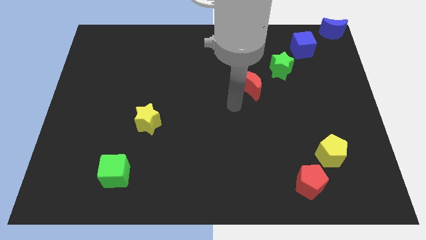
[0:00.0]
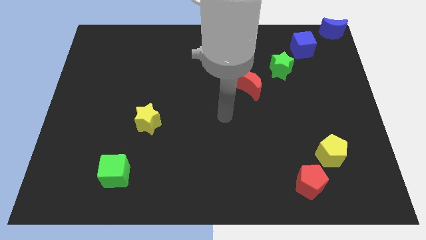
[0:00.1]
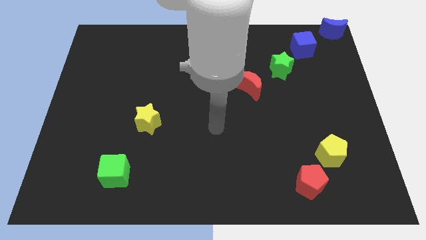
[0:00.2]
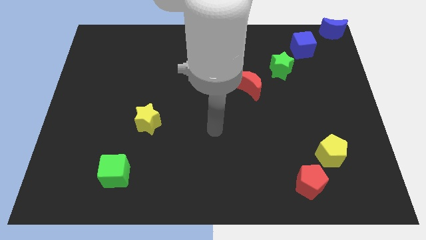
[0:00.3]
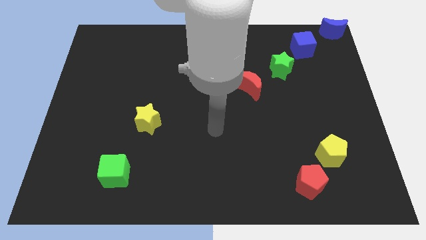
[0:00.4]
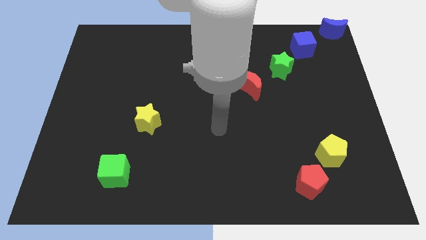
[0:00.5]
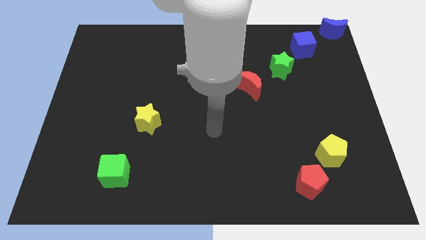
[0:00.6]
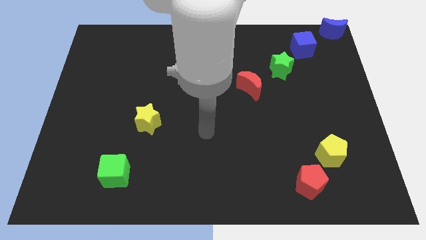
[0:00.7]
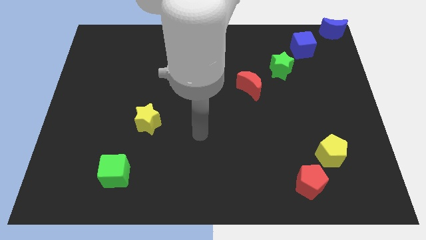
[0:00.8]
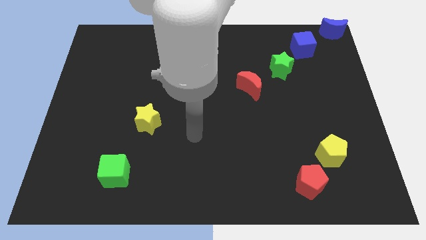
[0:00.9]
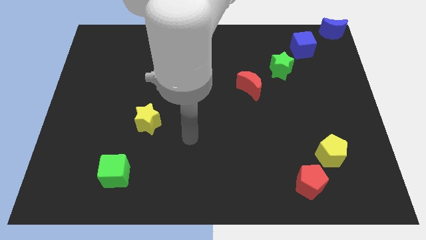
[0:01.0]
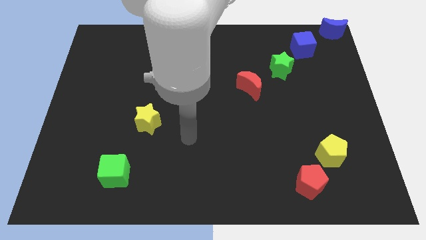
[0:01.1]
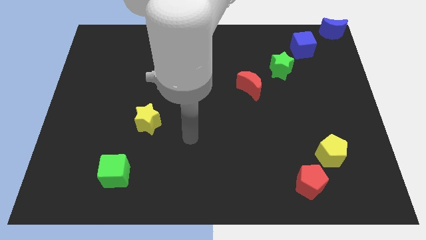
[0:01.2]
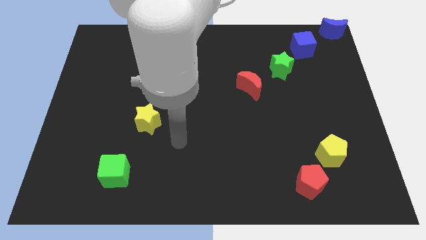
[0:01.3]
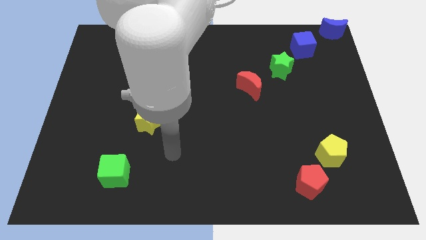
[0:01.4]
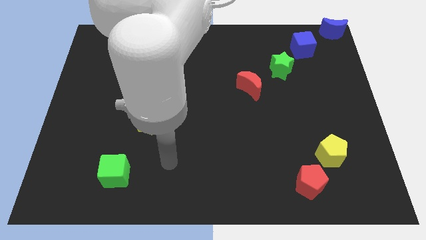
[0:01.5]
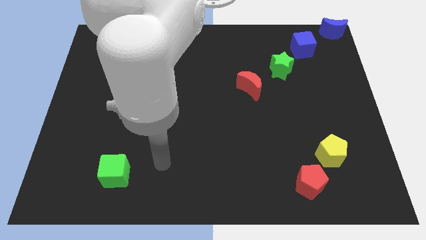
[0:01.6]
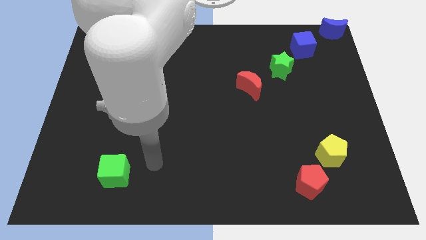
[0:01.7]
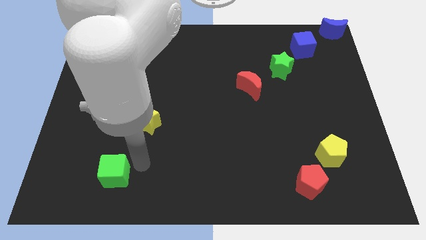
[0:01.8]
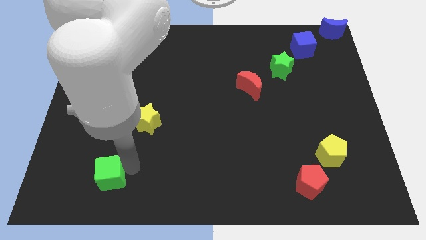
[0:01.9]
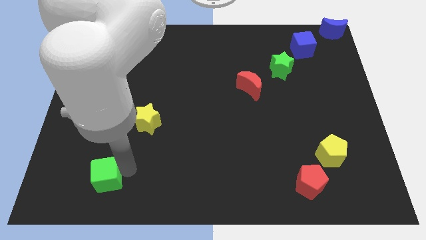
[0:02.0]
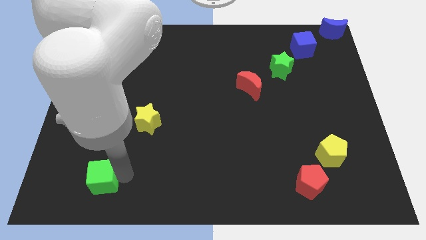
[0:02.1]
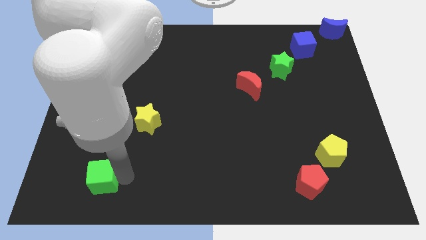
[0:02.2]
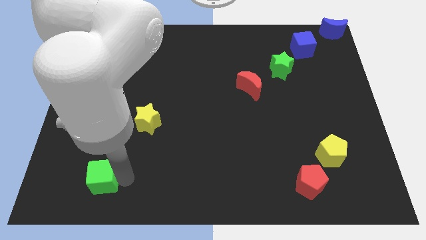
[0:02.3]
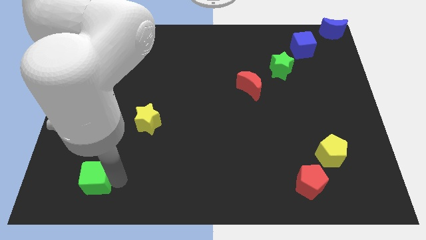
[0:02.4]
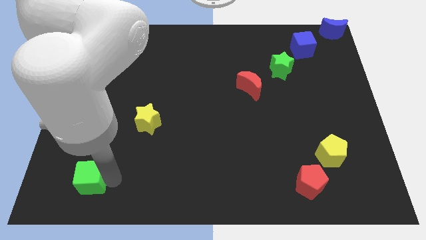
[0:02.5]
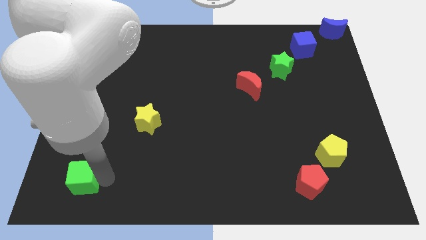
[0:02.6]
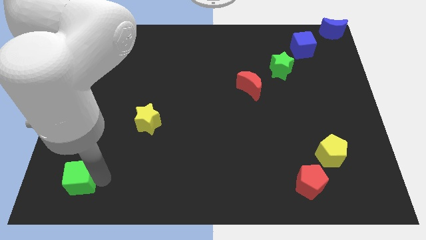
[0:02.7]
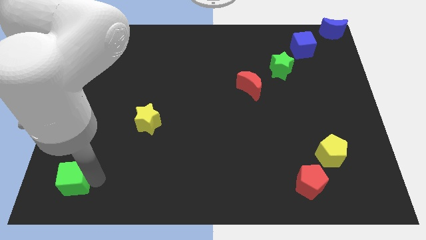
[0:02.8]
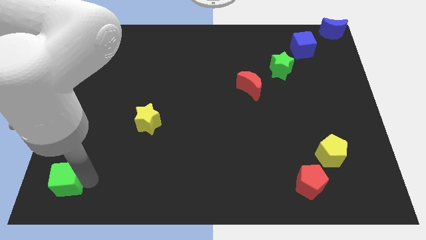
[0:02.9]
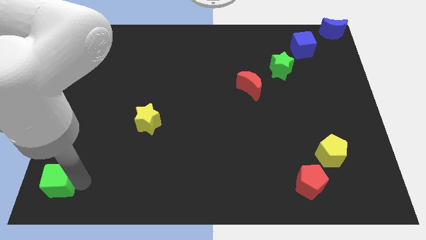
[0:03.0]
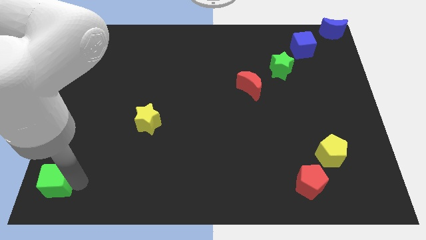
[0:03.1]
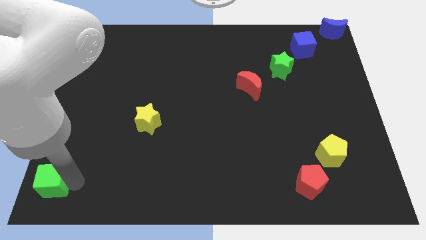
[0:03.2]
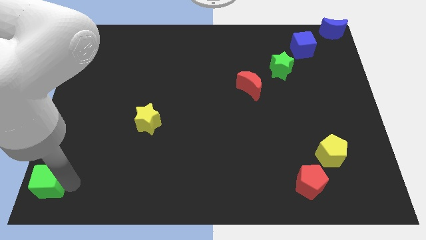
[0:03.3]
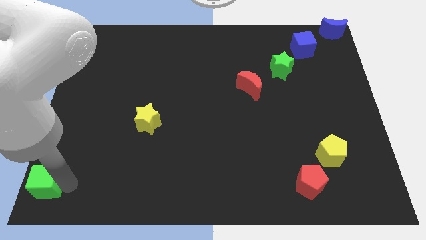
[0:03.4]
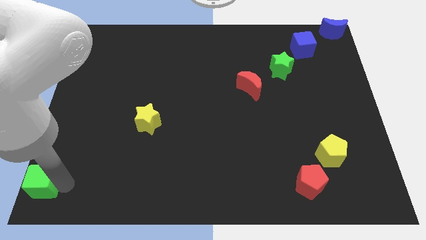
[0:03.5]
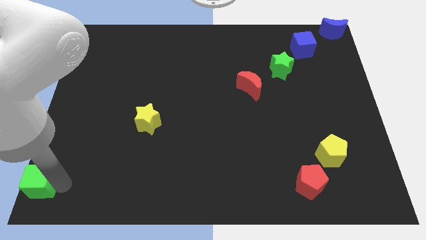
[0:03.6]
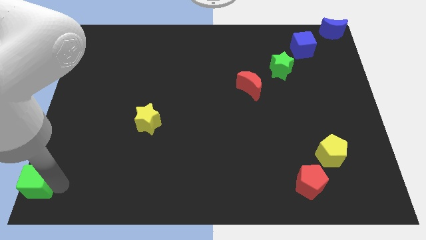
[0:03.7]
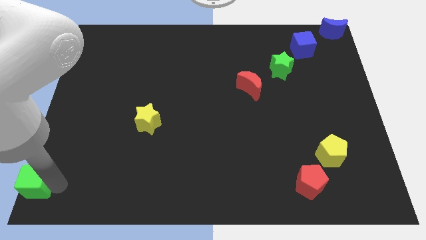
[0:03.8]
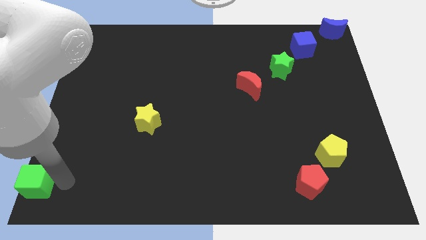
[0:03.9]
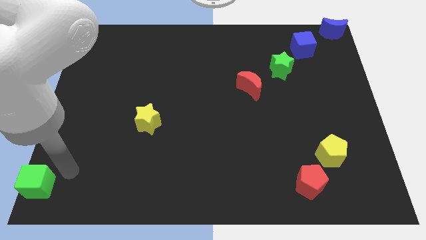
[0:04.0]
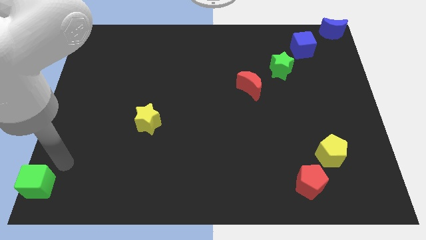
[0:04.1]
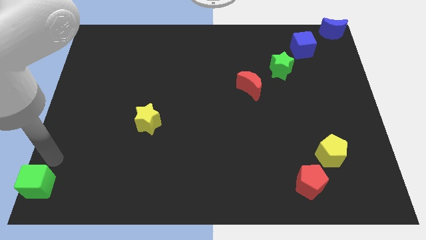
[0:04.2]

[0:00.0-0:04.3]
push the green cube to the left side of the board

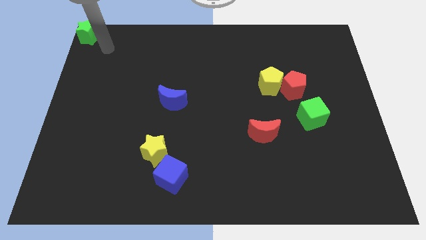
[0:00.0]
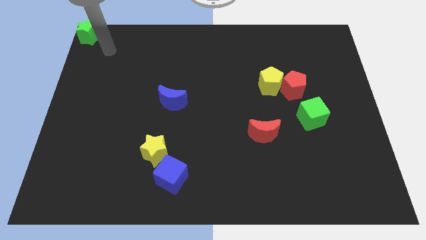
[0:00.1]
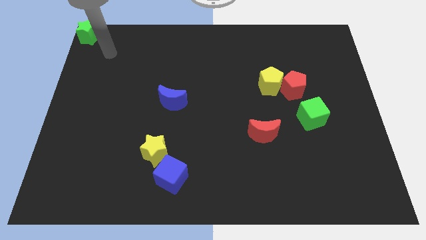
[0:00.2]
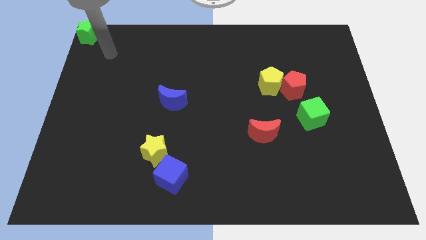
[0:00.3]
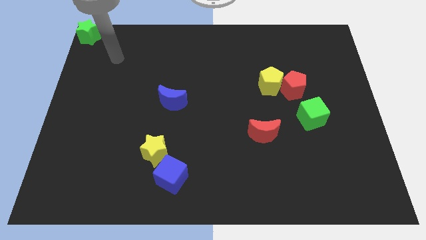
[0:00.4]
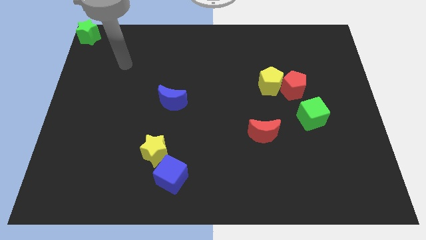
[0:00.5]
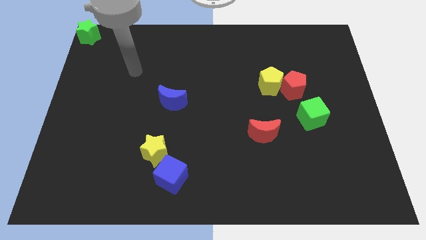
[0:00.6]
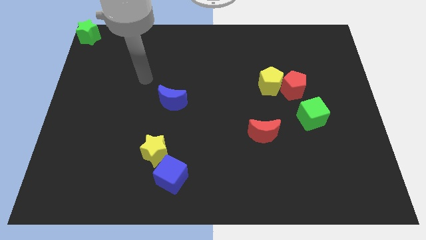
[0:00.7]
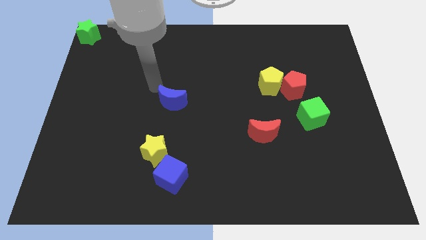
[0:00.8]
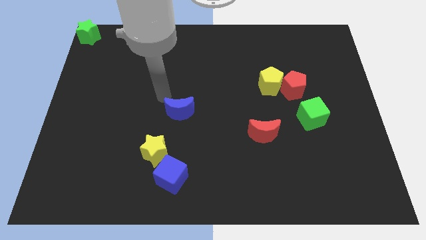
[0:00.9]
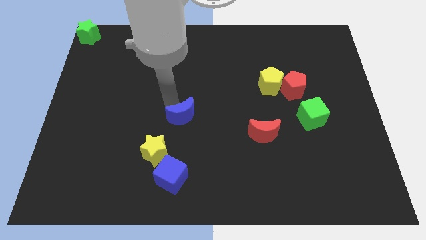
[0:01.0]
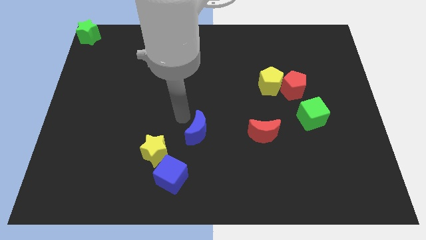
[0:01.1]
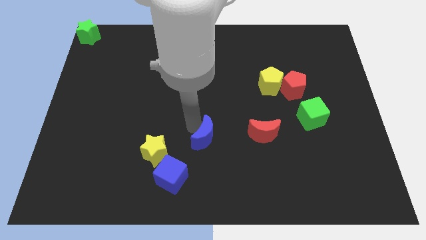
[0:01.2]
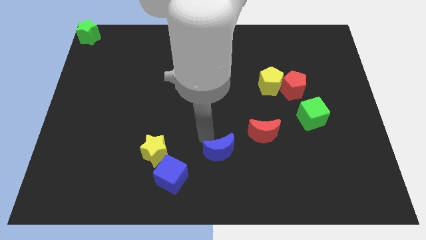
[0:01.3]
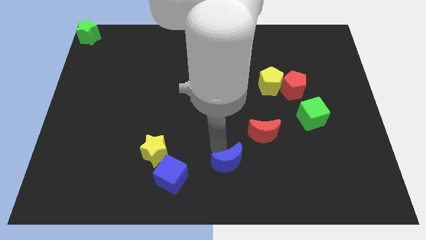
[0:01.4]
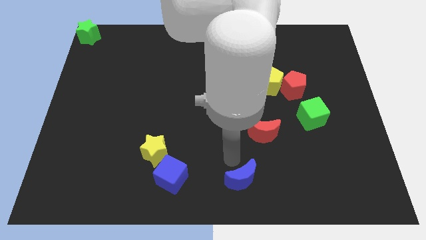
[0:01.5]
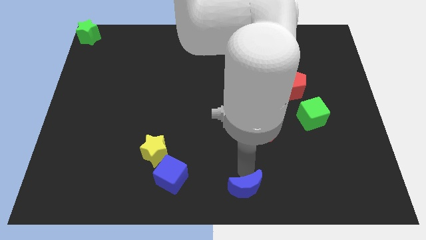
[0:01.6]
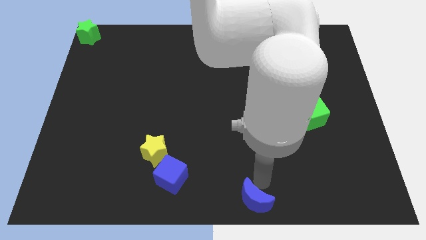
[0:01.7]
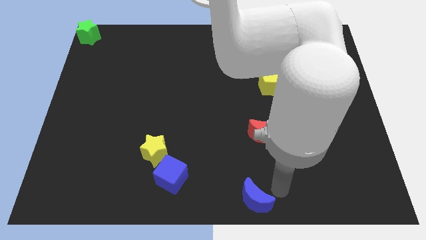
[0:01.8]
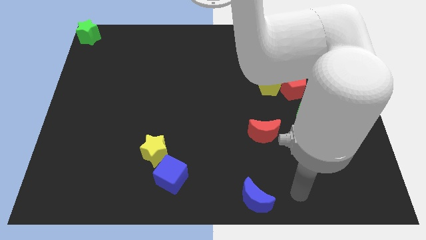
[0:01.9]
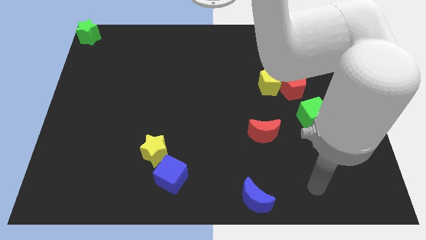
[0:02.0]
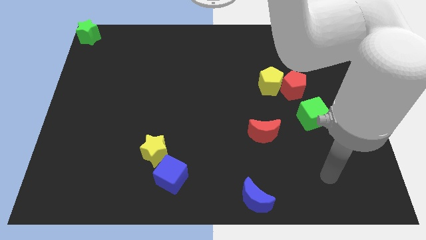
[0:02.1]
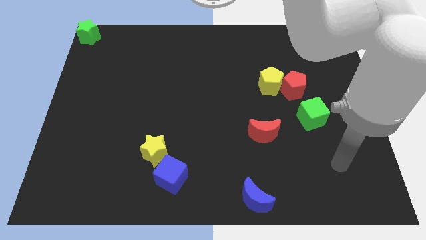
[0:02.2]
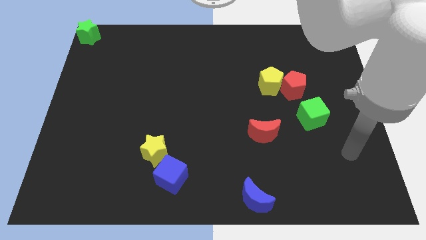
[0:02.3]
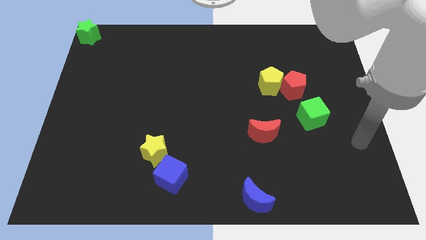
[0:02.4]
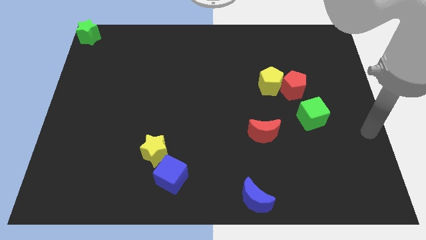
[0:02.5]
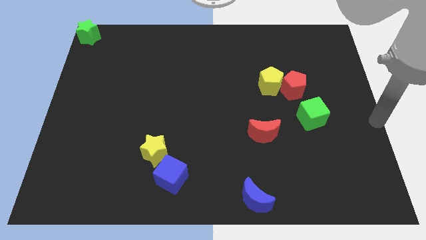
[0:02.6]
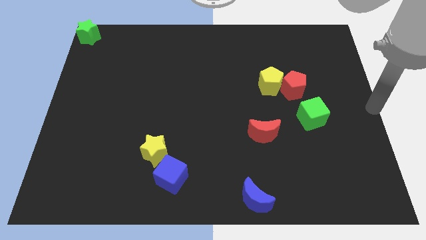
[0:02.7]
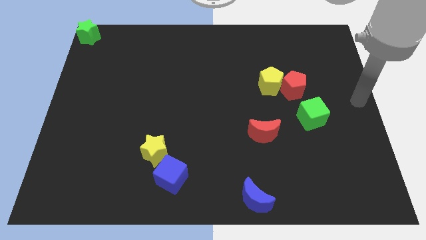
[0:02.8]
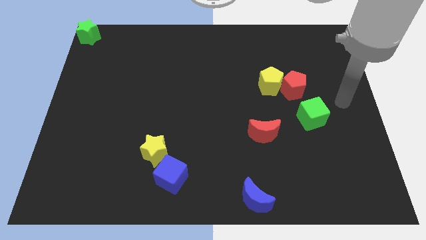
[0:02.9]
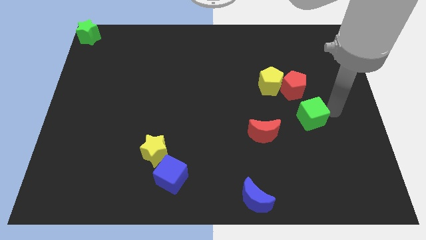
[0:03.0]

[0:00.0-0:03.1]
move the blue crescent bottom center

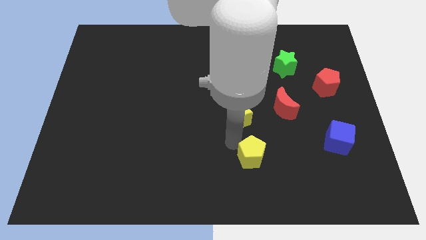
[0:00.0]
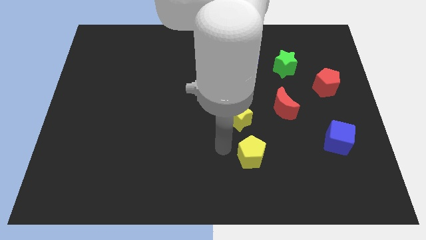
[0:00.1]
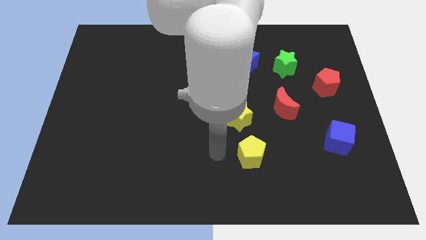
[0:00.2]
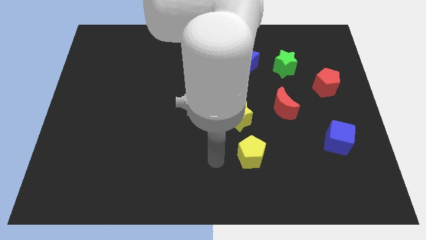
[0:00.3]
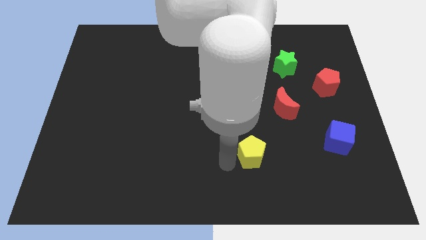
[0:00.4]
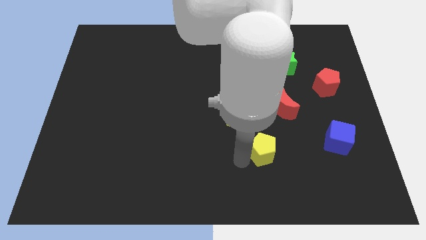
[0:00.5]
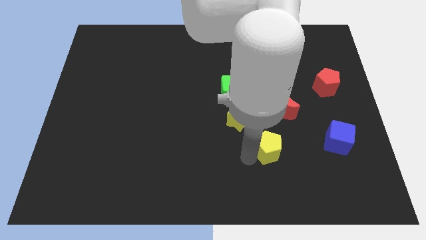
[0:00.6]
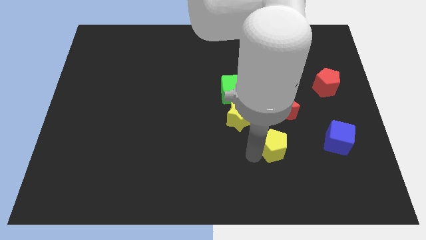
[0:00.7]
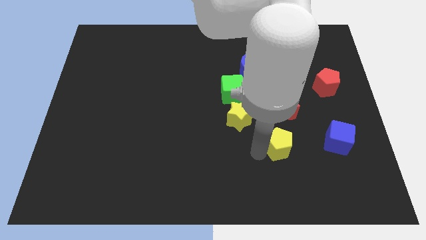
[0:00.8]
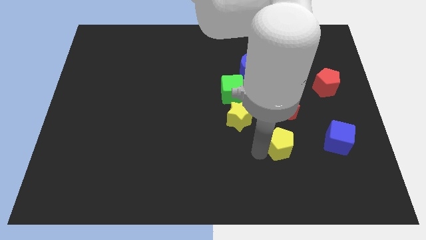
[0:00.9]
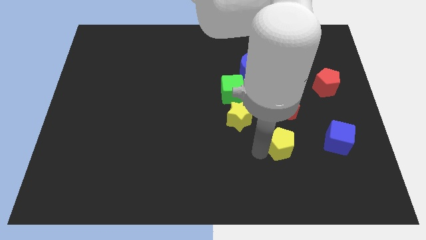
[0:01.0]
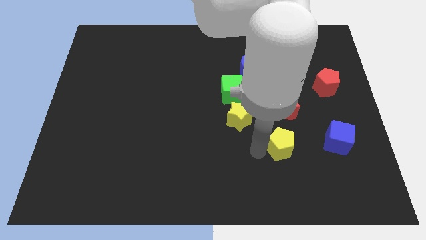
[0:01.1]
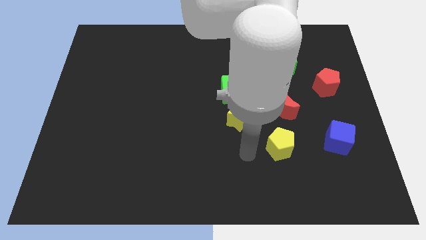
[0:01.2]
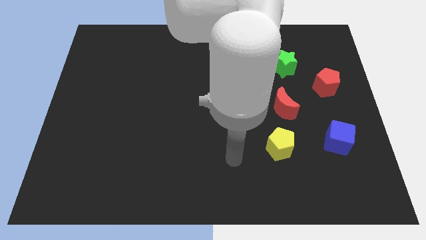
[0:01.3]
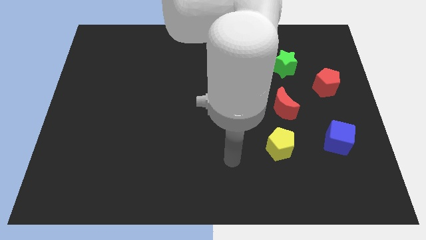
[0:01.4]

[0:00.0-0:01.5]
move the yellow pentagon to the right side slightly

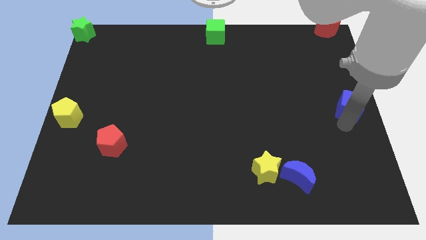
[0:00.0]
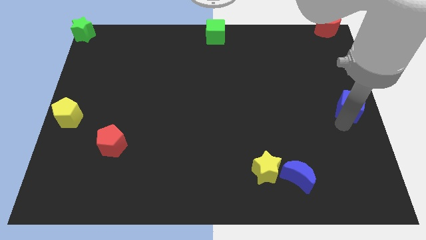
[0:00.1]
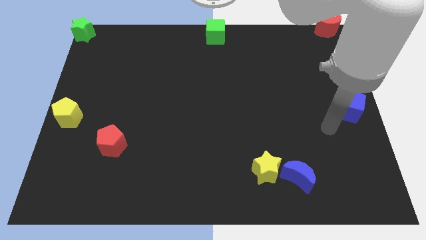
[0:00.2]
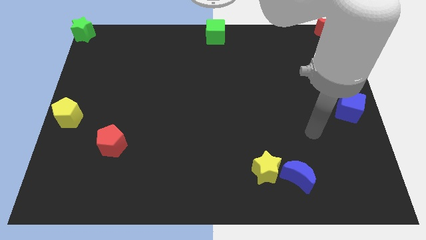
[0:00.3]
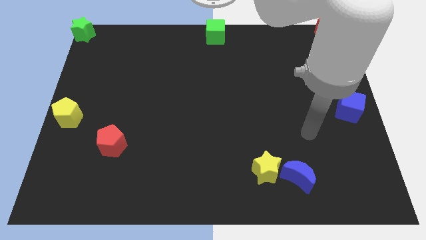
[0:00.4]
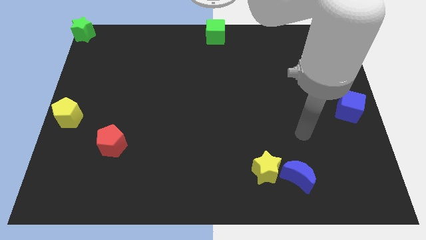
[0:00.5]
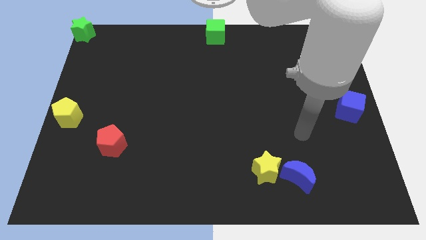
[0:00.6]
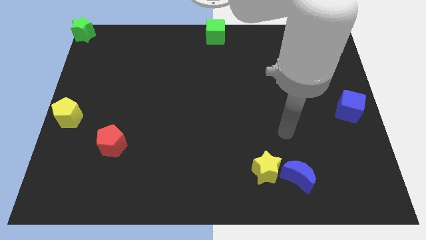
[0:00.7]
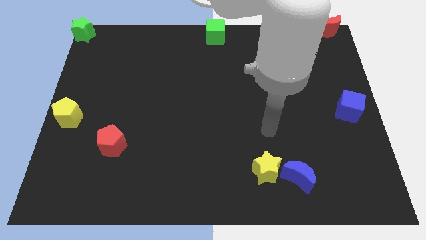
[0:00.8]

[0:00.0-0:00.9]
move your arm away from blue cube
